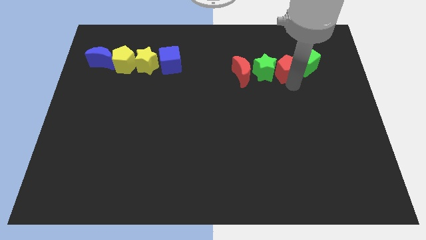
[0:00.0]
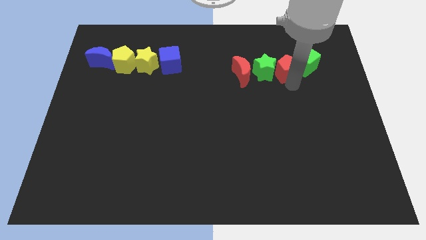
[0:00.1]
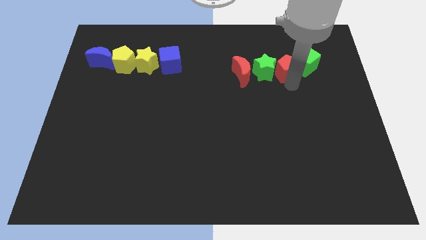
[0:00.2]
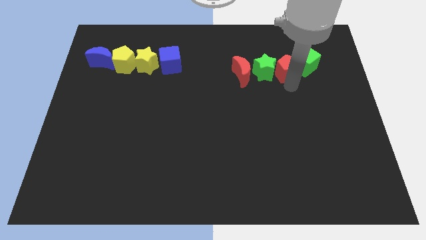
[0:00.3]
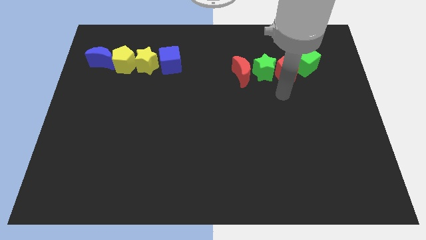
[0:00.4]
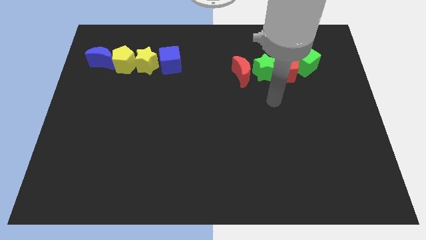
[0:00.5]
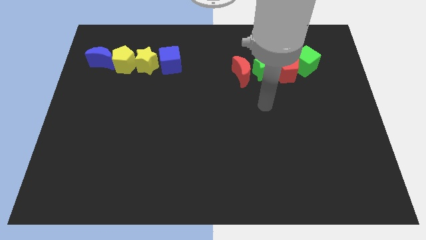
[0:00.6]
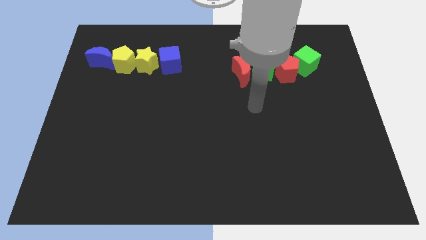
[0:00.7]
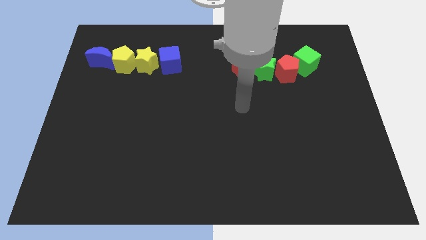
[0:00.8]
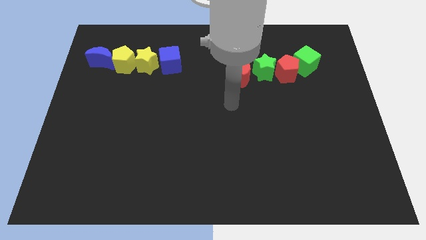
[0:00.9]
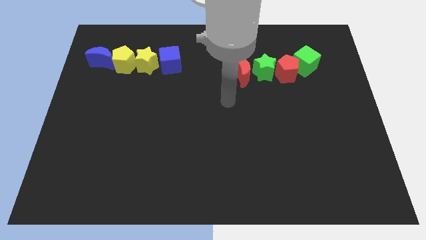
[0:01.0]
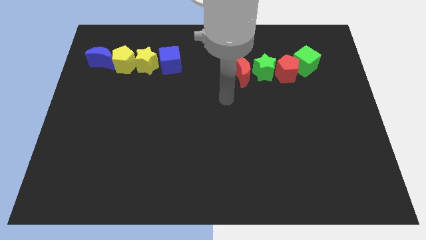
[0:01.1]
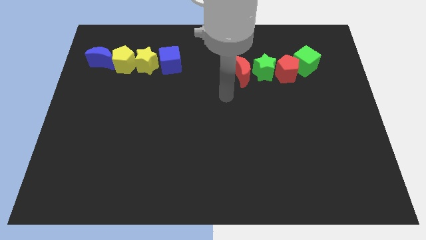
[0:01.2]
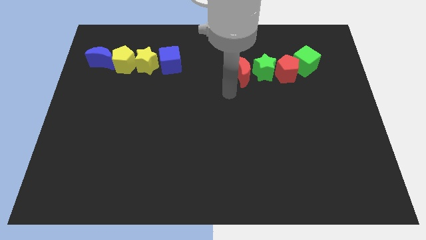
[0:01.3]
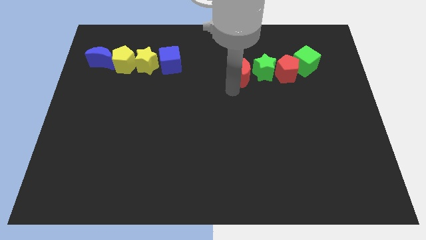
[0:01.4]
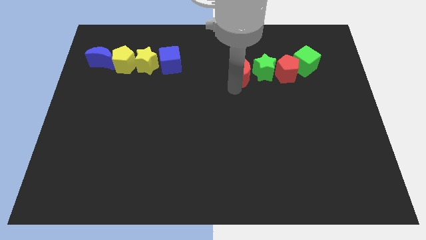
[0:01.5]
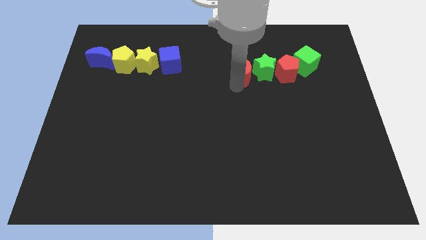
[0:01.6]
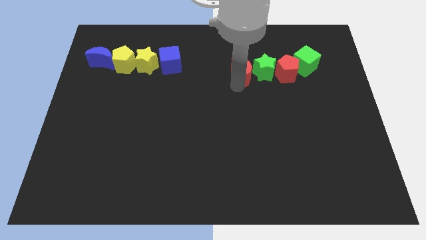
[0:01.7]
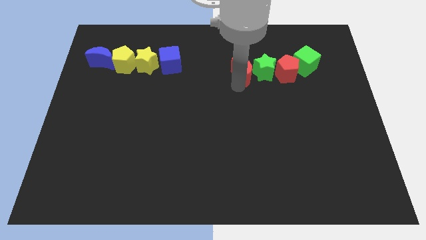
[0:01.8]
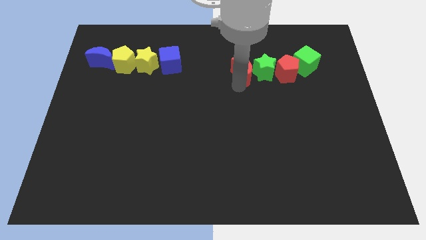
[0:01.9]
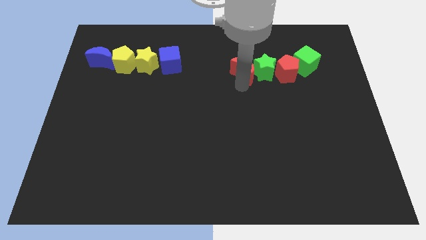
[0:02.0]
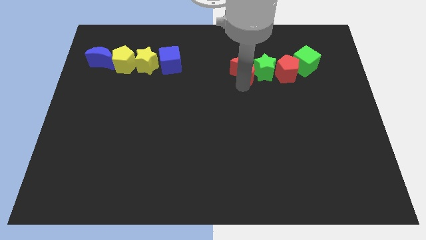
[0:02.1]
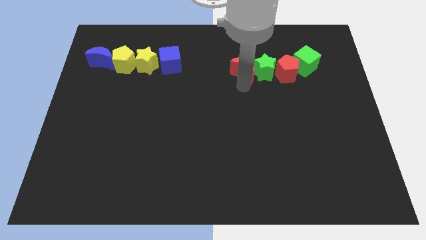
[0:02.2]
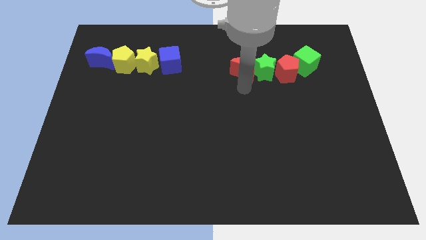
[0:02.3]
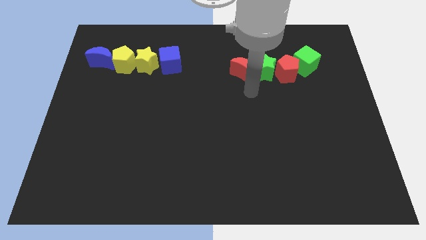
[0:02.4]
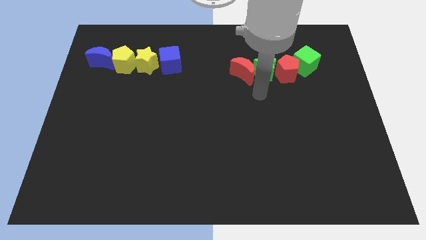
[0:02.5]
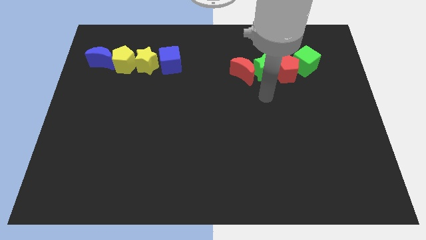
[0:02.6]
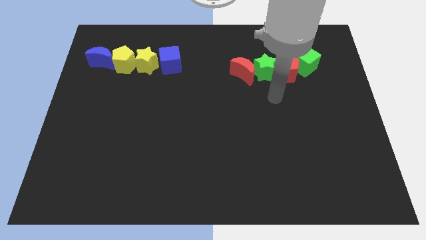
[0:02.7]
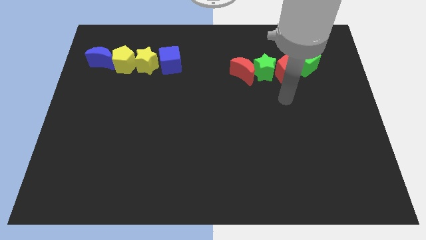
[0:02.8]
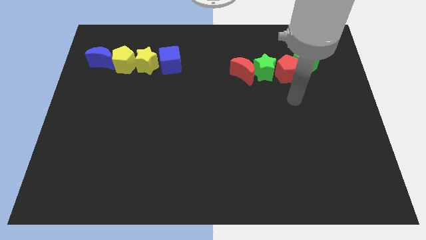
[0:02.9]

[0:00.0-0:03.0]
slightly push the red moon to the left of green star

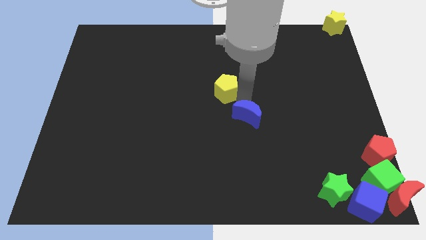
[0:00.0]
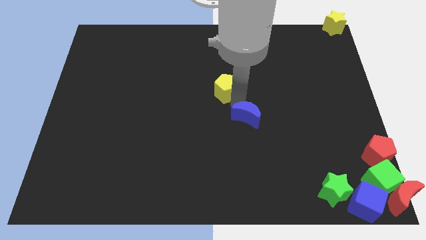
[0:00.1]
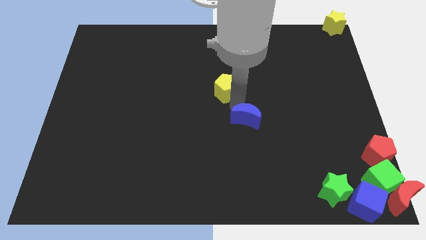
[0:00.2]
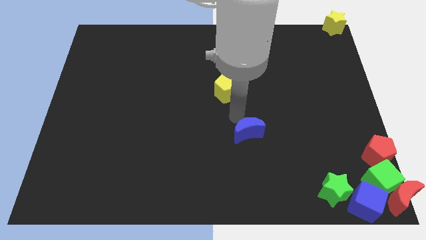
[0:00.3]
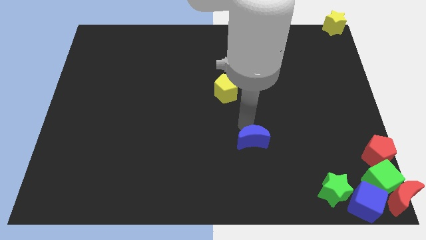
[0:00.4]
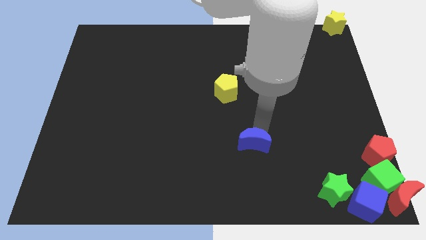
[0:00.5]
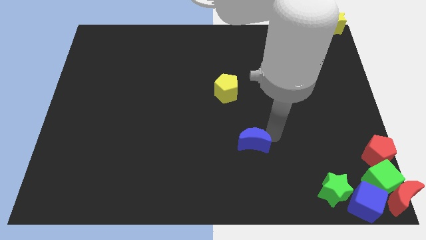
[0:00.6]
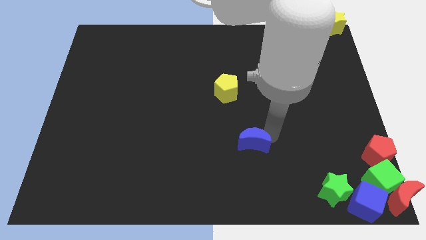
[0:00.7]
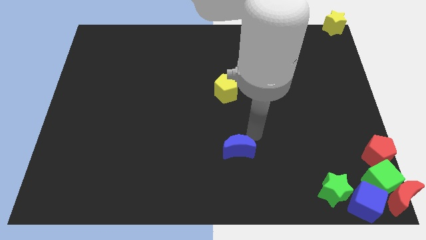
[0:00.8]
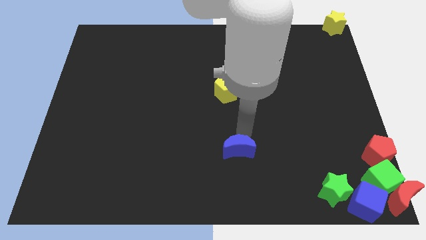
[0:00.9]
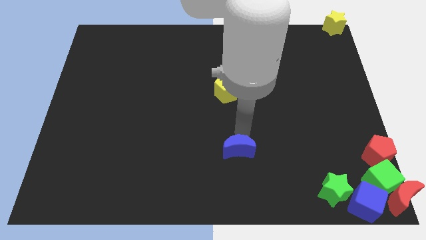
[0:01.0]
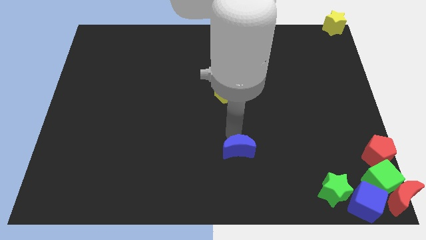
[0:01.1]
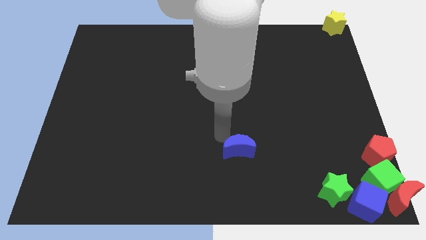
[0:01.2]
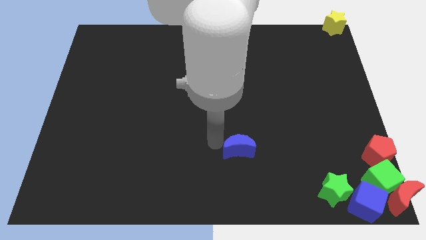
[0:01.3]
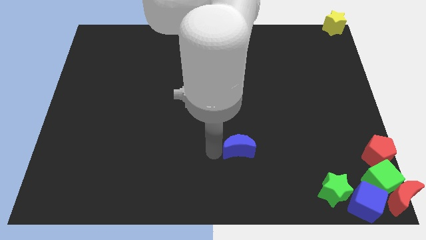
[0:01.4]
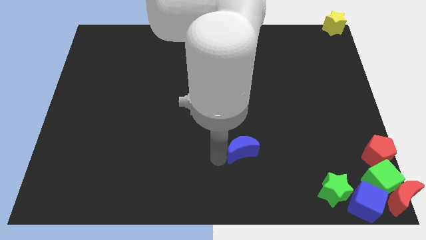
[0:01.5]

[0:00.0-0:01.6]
move the blue moon towards the bottom center of the board

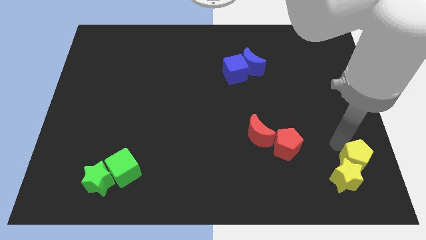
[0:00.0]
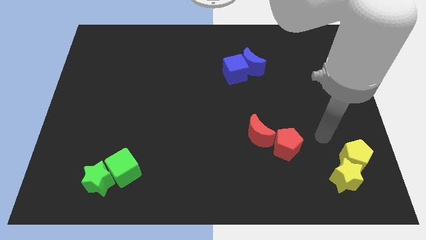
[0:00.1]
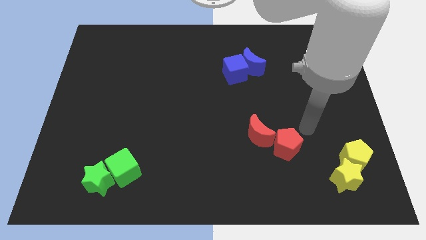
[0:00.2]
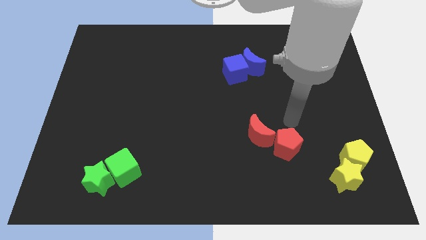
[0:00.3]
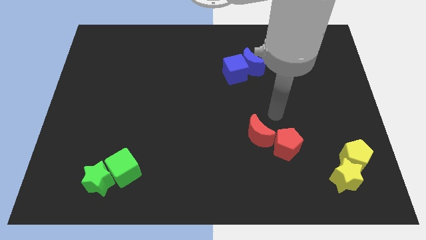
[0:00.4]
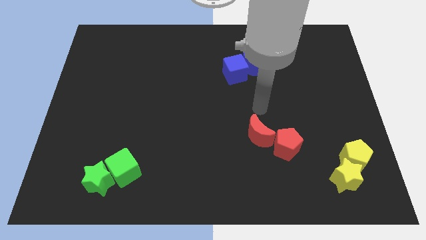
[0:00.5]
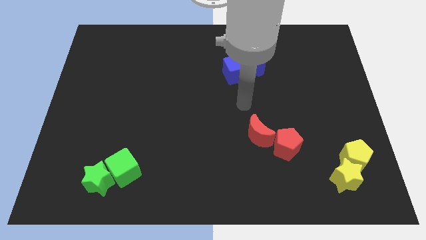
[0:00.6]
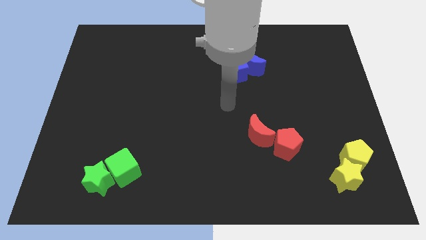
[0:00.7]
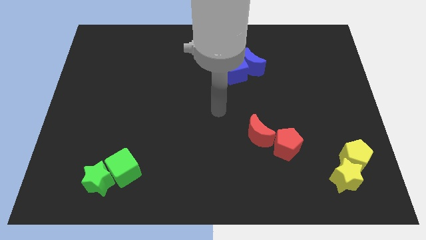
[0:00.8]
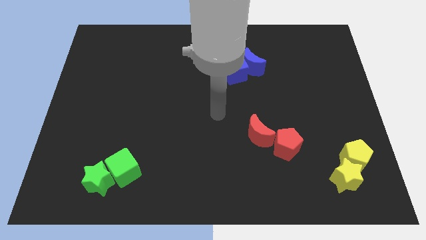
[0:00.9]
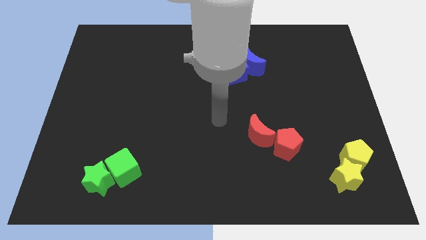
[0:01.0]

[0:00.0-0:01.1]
go and place your hand at the center of the board

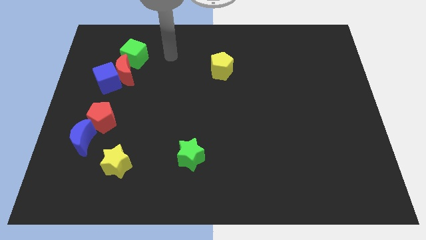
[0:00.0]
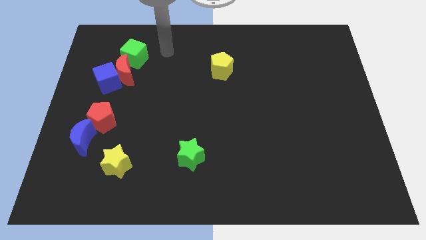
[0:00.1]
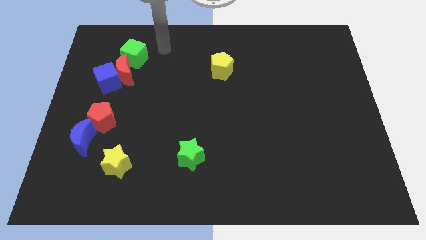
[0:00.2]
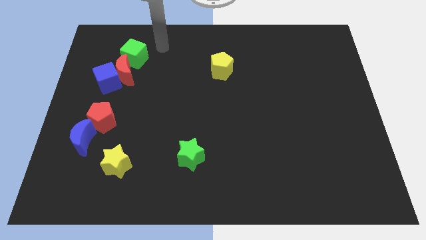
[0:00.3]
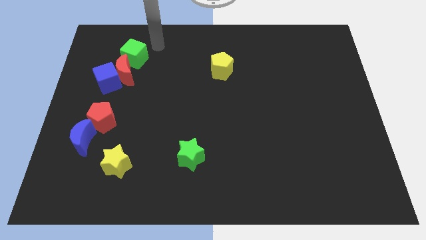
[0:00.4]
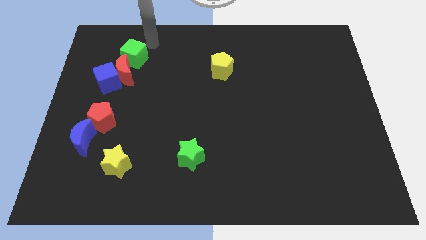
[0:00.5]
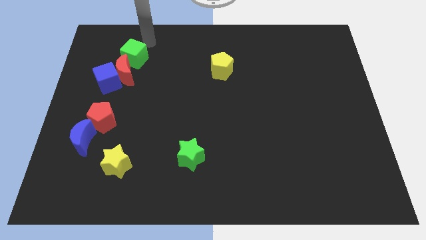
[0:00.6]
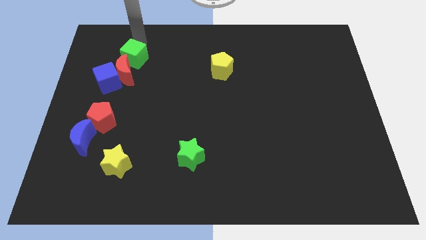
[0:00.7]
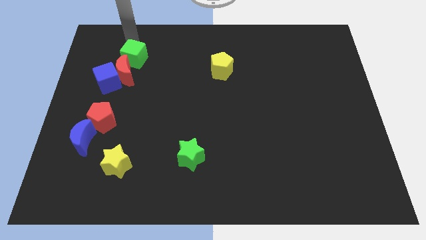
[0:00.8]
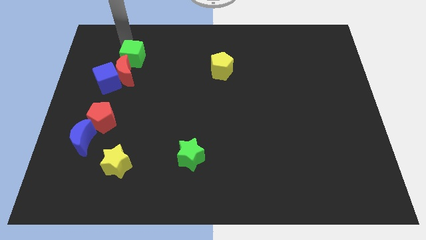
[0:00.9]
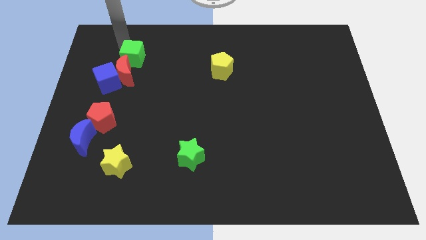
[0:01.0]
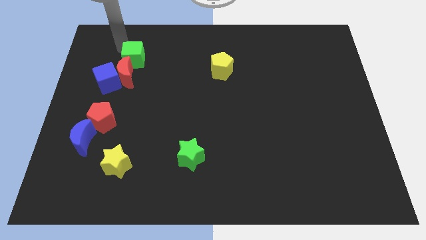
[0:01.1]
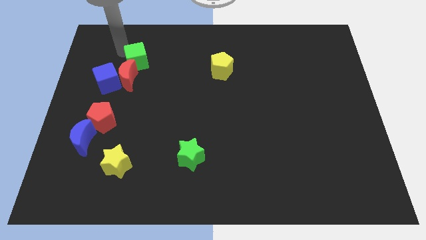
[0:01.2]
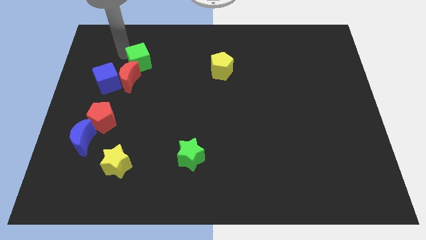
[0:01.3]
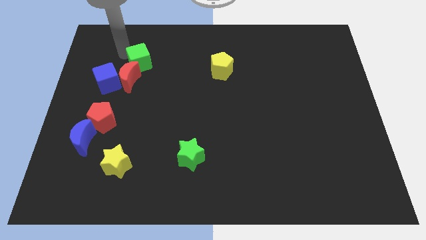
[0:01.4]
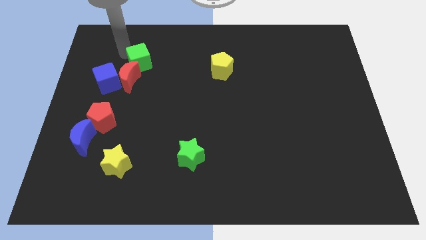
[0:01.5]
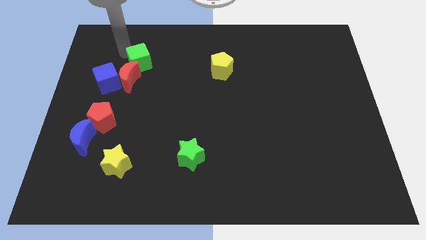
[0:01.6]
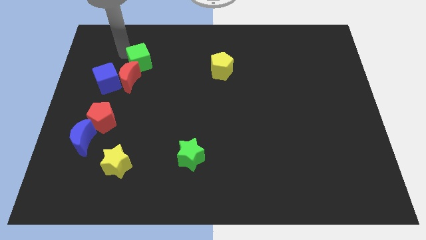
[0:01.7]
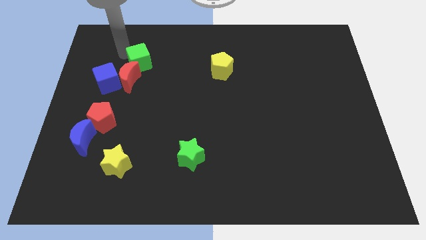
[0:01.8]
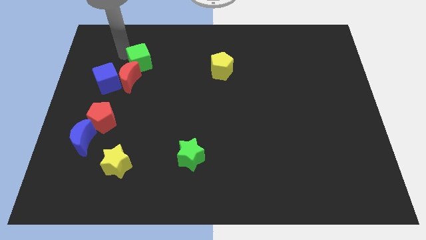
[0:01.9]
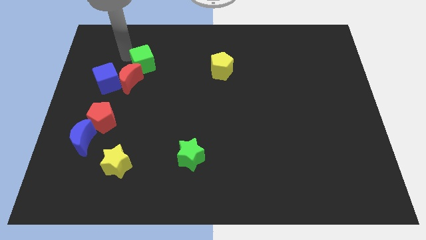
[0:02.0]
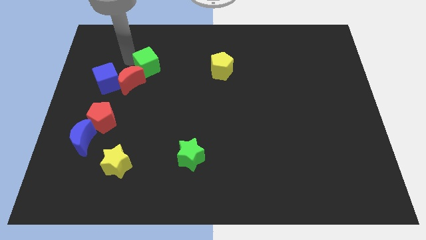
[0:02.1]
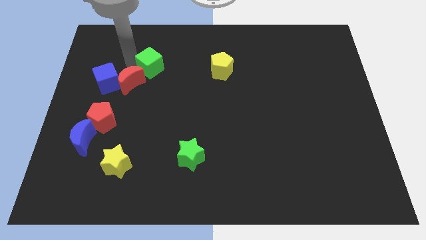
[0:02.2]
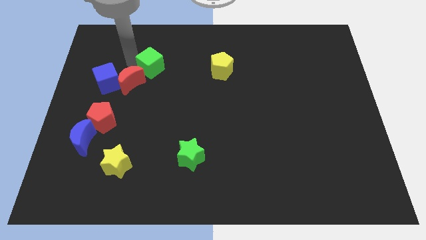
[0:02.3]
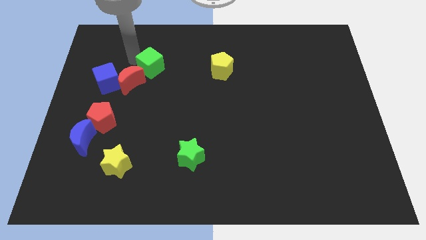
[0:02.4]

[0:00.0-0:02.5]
push the green cube to the left of yellow pentagon

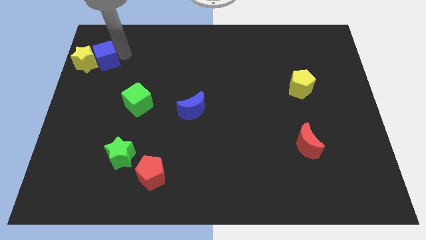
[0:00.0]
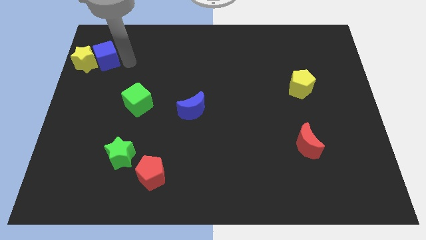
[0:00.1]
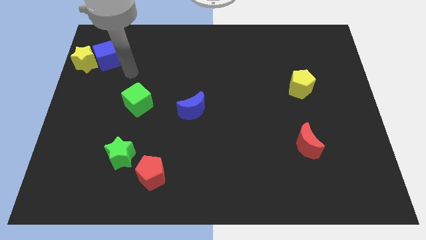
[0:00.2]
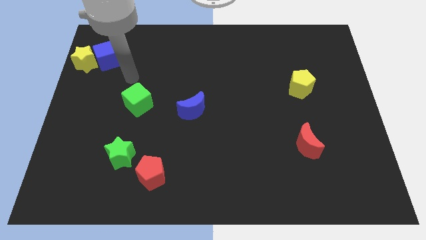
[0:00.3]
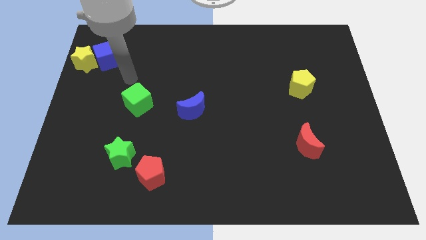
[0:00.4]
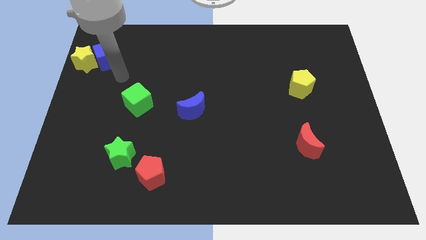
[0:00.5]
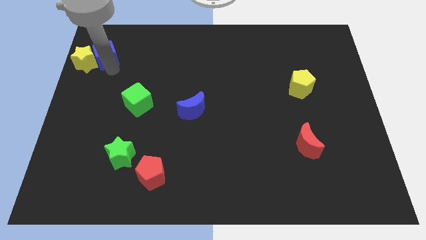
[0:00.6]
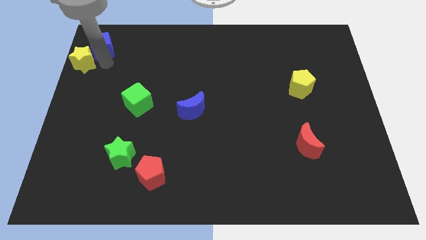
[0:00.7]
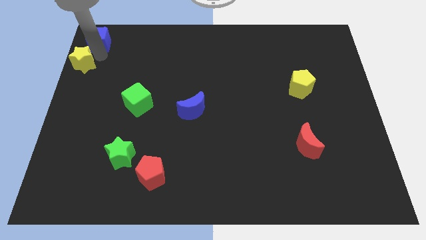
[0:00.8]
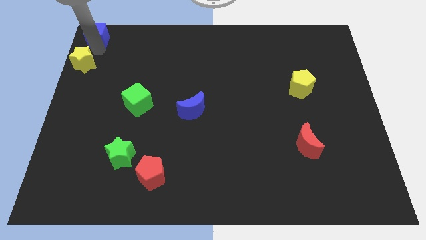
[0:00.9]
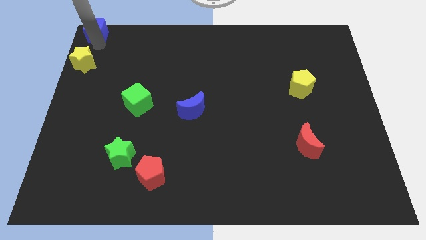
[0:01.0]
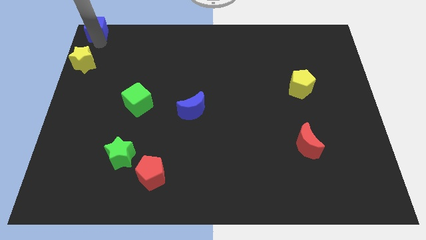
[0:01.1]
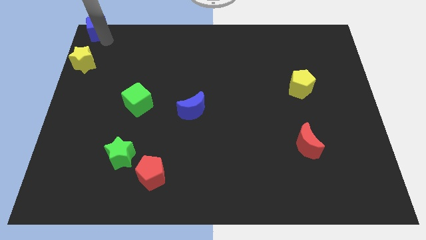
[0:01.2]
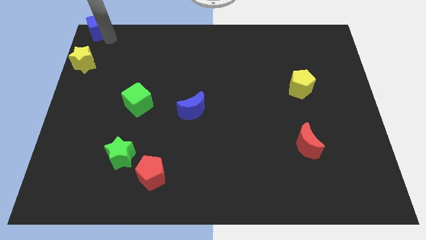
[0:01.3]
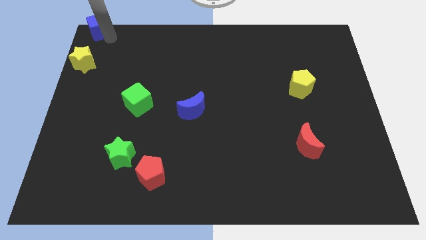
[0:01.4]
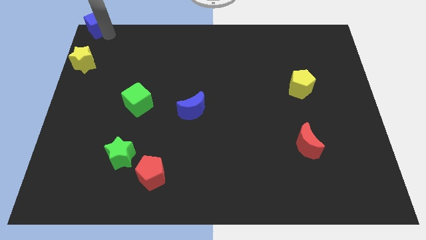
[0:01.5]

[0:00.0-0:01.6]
separate the blue cube to the top left corner
